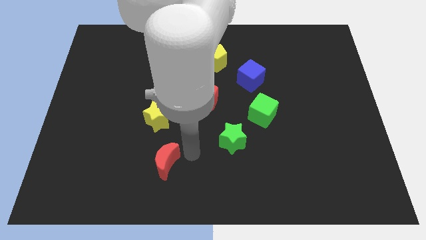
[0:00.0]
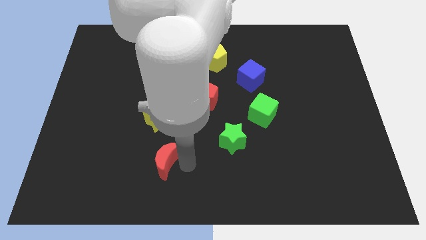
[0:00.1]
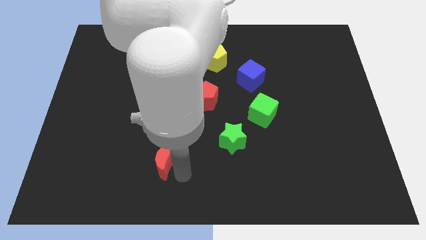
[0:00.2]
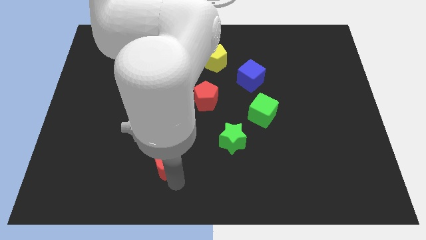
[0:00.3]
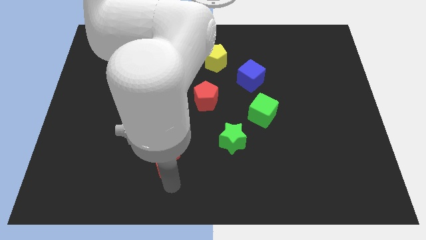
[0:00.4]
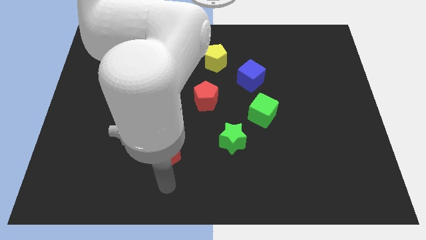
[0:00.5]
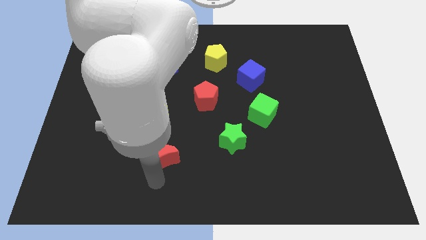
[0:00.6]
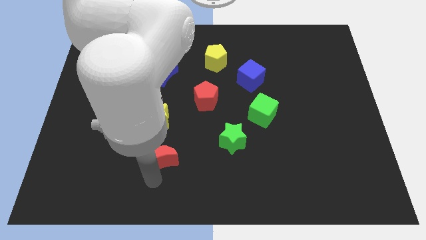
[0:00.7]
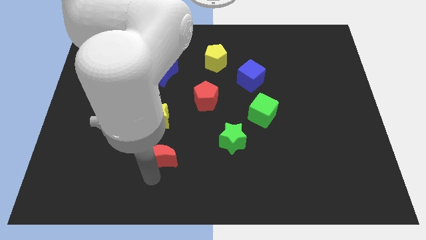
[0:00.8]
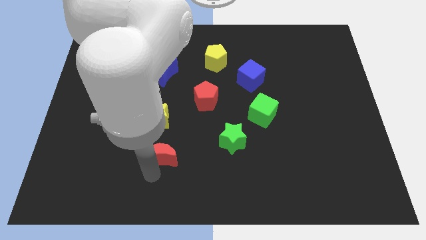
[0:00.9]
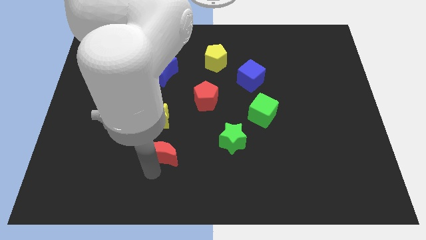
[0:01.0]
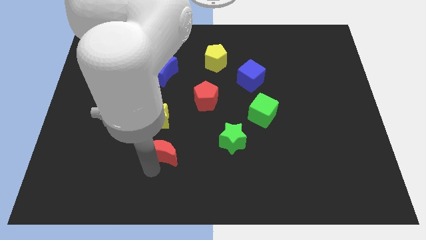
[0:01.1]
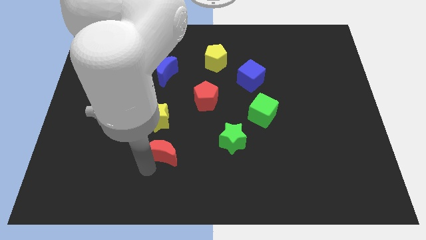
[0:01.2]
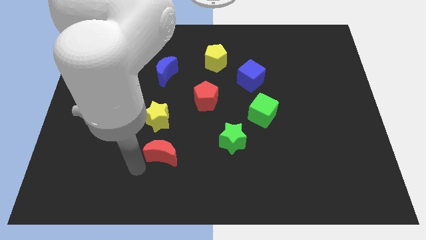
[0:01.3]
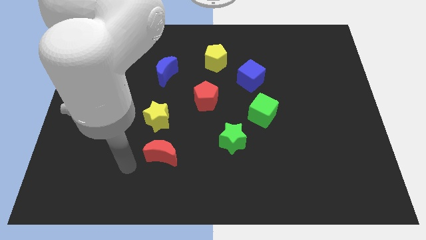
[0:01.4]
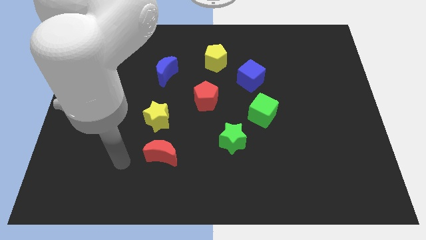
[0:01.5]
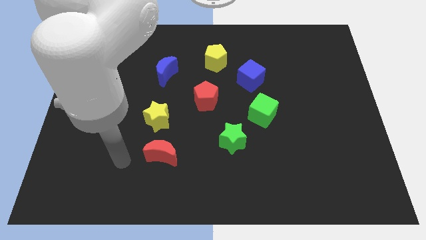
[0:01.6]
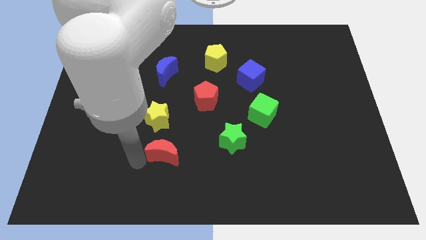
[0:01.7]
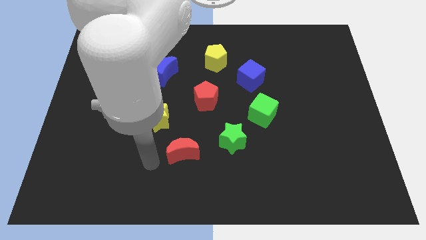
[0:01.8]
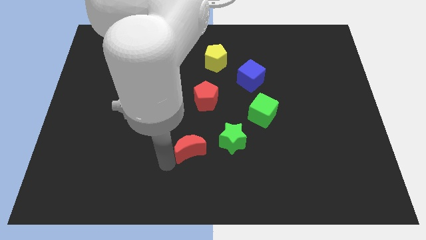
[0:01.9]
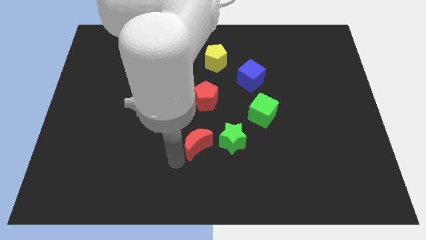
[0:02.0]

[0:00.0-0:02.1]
move the red crescent towards the green star

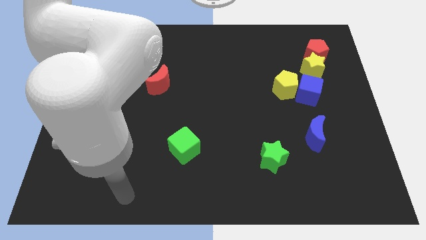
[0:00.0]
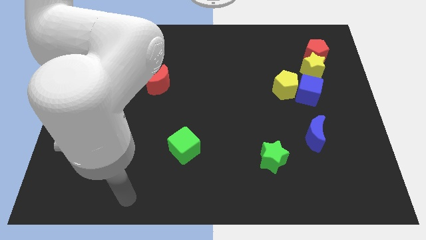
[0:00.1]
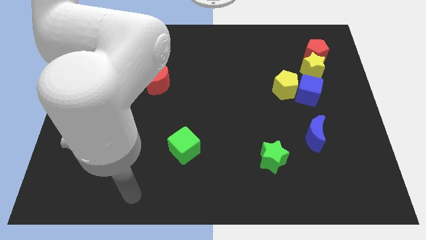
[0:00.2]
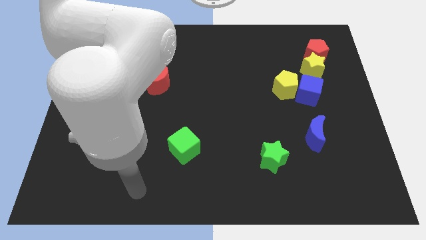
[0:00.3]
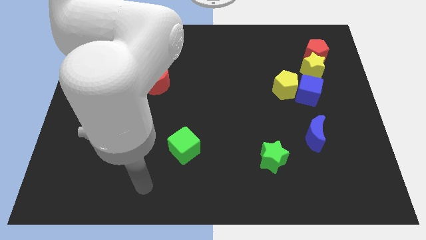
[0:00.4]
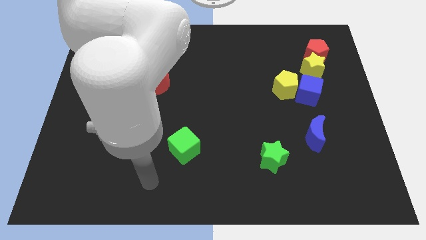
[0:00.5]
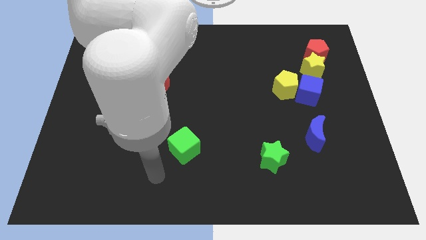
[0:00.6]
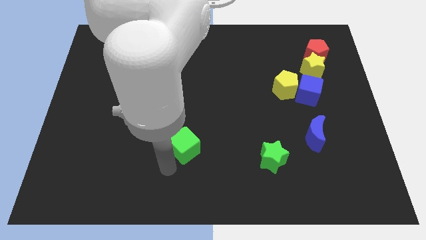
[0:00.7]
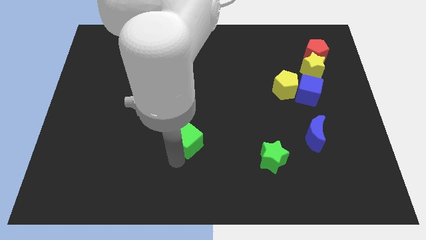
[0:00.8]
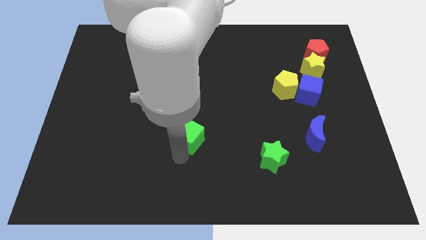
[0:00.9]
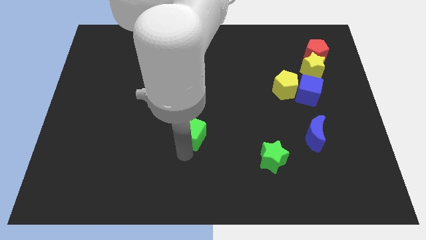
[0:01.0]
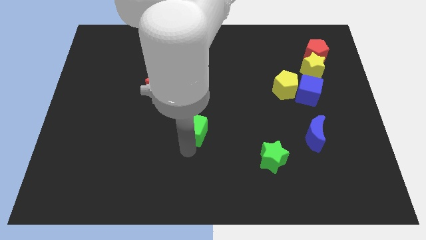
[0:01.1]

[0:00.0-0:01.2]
push the green cube slightly to the center of the board

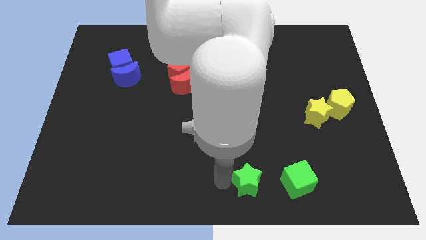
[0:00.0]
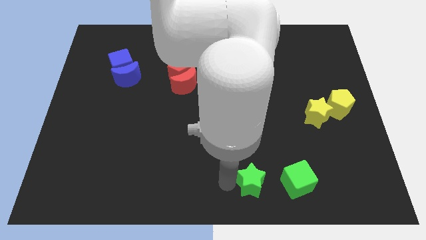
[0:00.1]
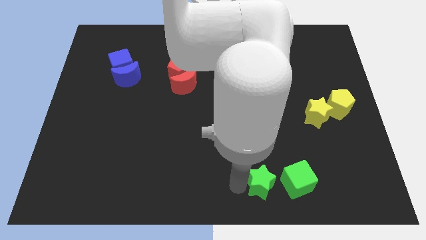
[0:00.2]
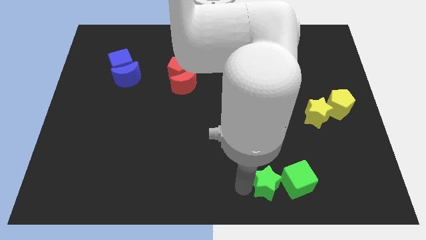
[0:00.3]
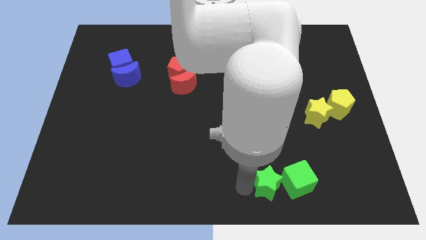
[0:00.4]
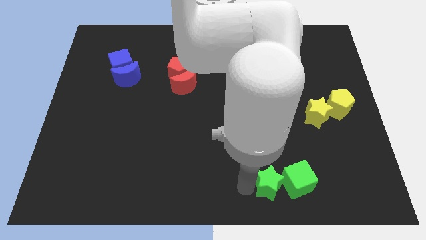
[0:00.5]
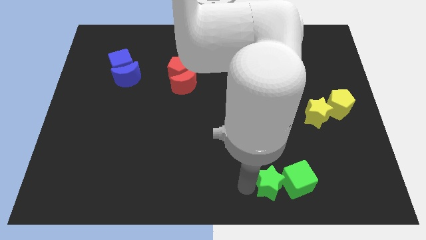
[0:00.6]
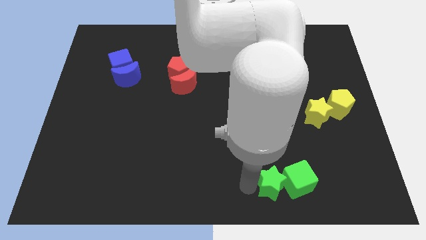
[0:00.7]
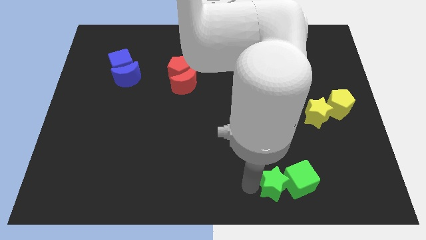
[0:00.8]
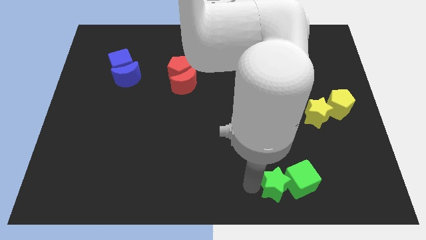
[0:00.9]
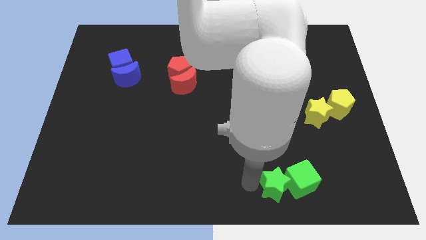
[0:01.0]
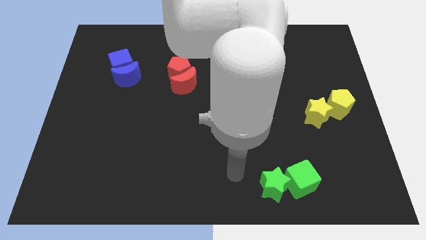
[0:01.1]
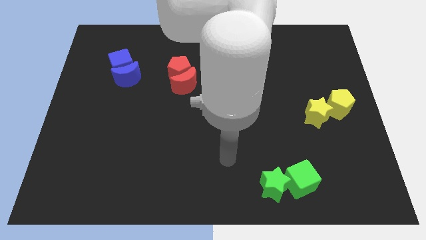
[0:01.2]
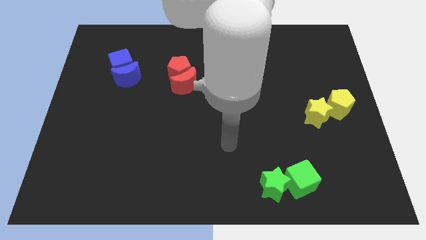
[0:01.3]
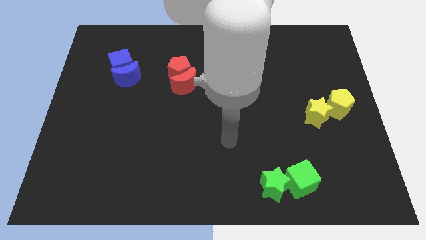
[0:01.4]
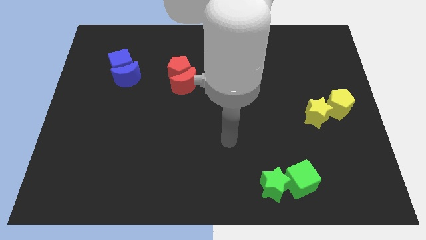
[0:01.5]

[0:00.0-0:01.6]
move the green star to the left side of the green cube

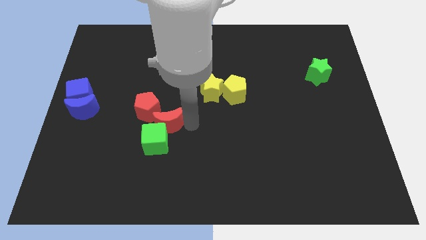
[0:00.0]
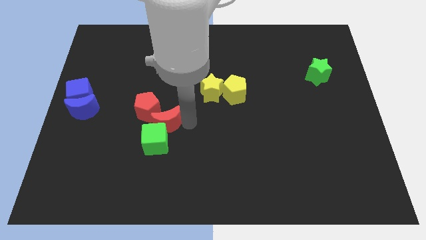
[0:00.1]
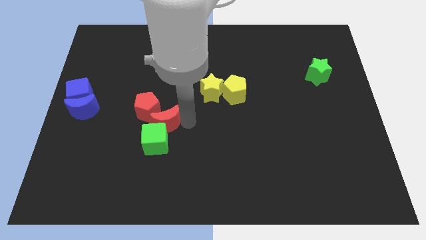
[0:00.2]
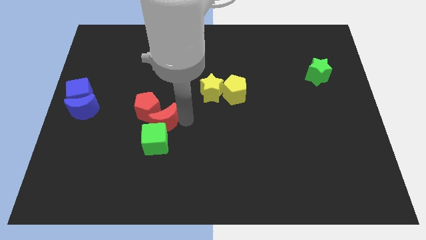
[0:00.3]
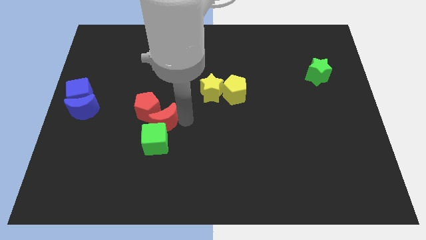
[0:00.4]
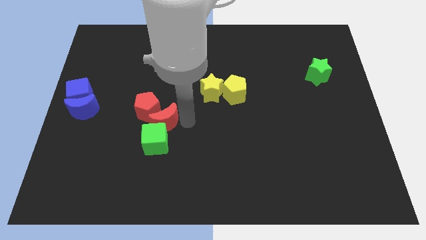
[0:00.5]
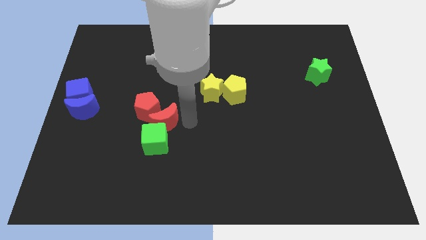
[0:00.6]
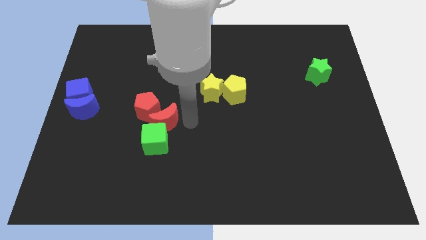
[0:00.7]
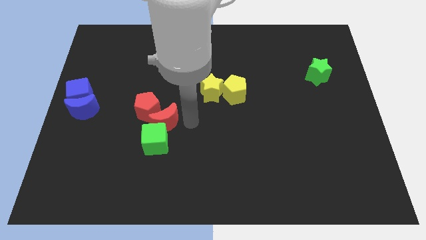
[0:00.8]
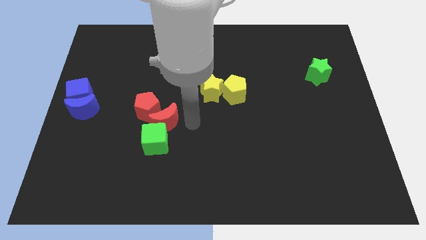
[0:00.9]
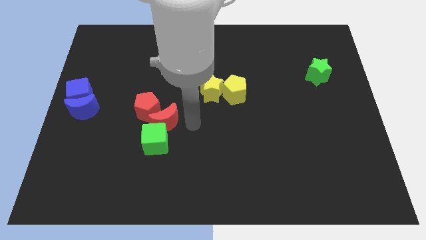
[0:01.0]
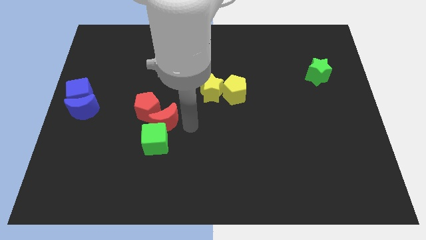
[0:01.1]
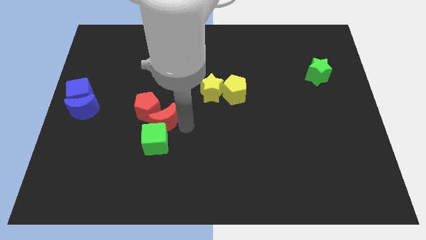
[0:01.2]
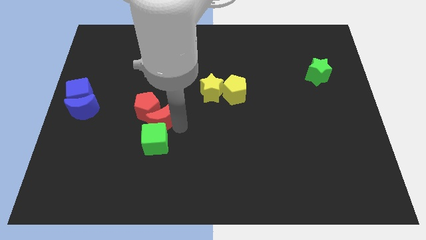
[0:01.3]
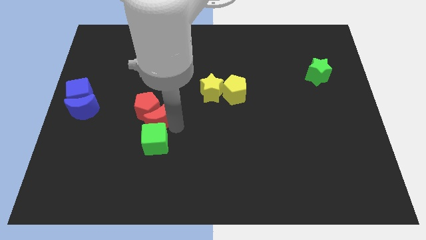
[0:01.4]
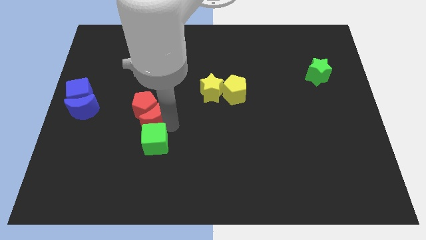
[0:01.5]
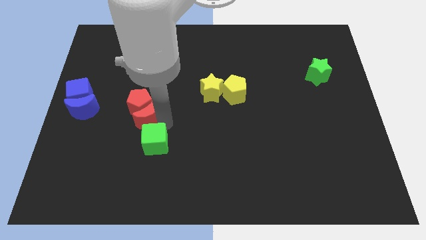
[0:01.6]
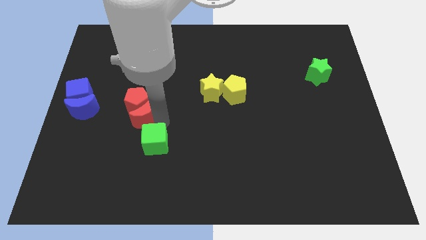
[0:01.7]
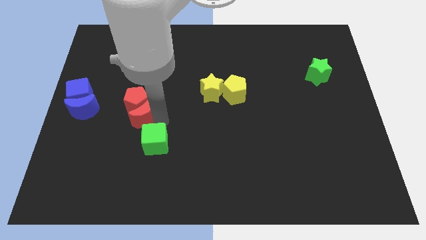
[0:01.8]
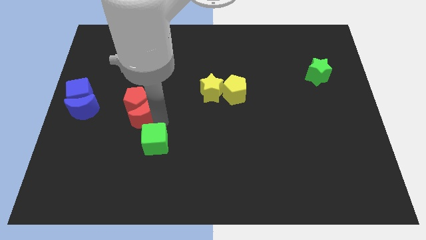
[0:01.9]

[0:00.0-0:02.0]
place the red moon into the red pentagon

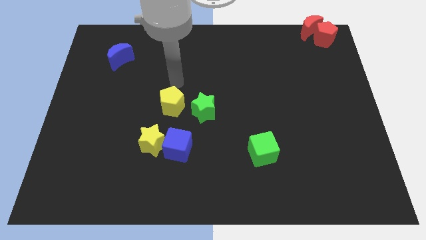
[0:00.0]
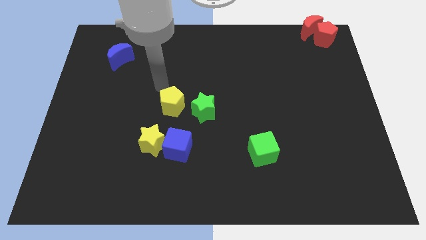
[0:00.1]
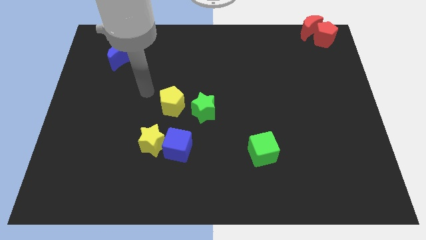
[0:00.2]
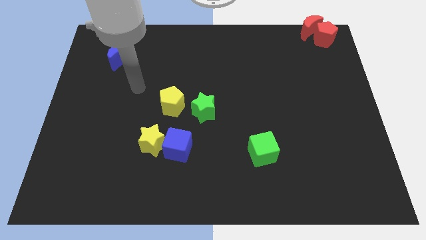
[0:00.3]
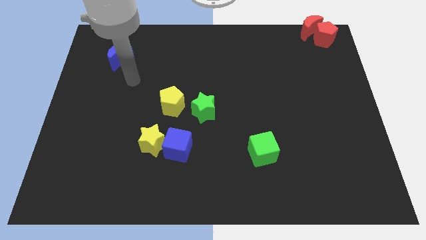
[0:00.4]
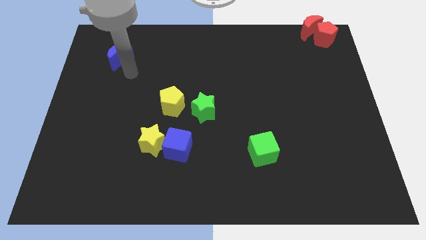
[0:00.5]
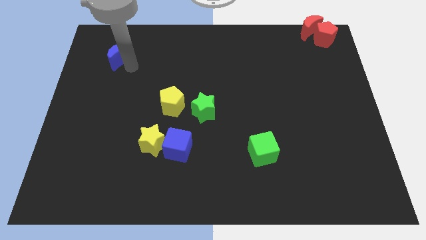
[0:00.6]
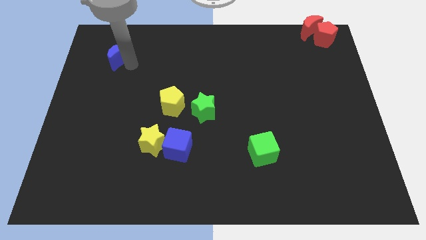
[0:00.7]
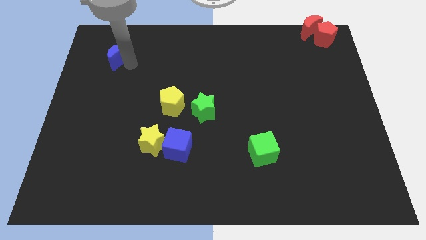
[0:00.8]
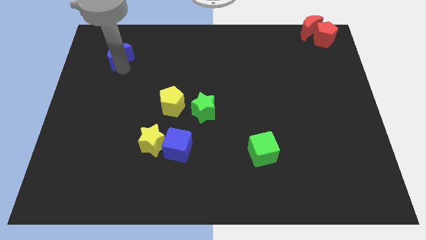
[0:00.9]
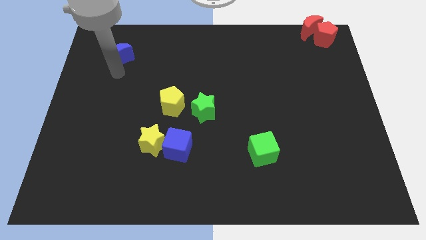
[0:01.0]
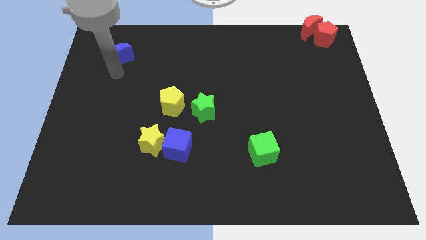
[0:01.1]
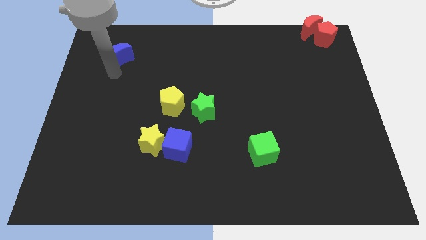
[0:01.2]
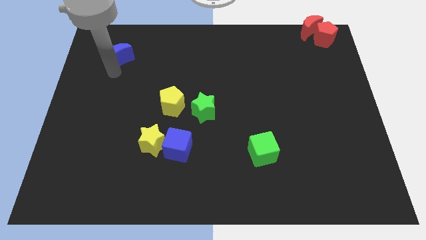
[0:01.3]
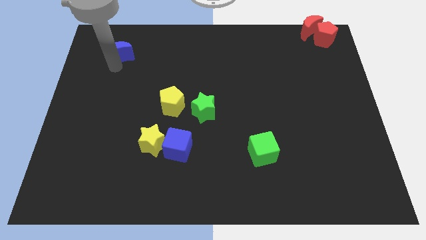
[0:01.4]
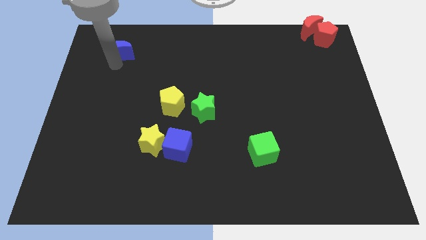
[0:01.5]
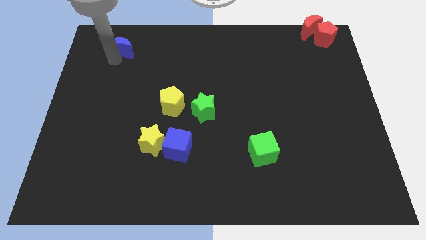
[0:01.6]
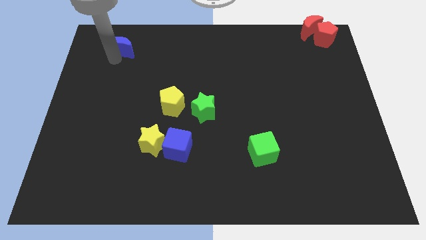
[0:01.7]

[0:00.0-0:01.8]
move the blue crescent slightly towards top left

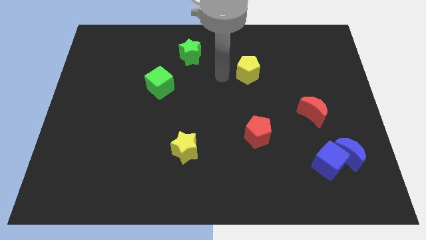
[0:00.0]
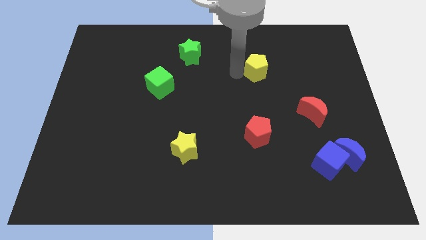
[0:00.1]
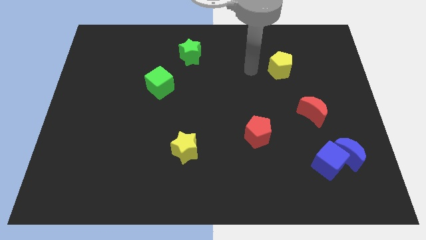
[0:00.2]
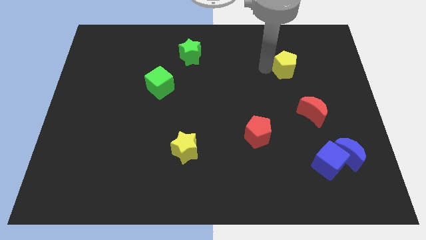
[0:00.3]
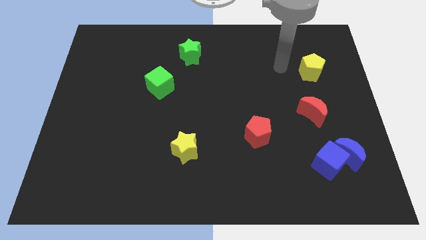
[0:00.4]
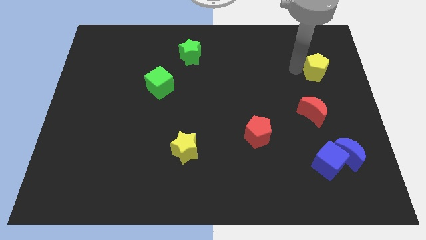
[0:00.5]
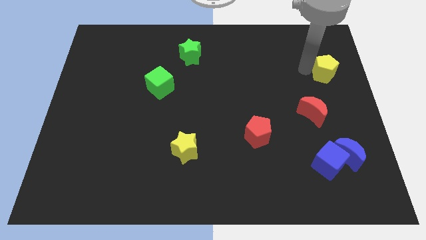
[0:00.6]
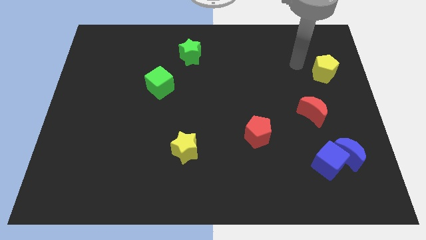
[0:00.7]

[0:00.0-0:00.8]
place the yellow pentagon above the red moon
